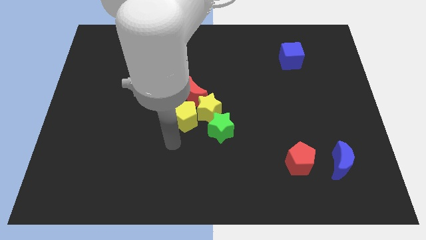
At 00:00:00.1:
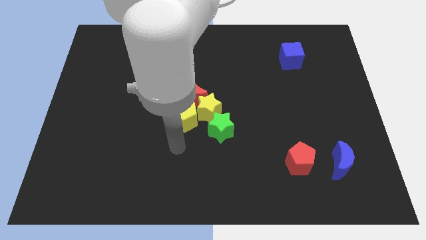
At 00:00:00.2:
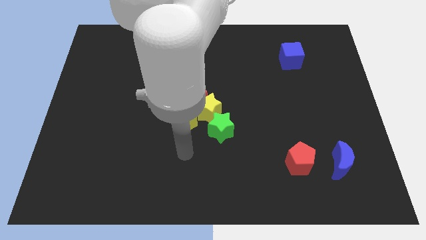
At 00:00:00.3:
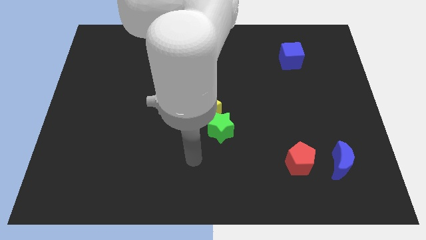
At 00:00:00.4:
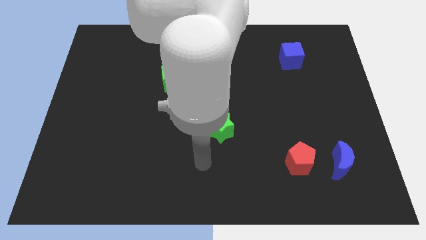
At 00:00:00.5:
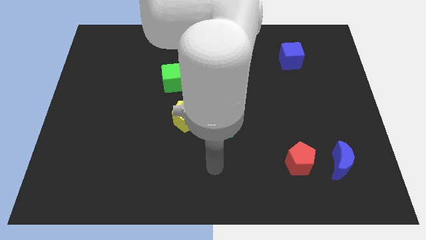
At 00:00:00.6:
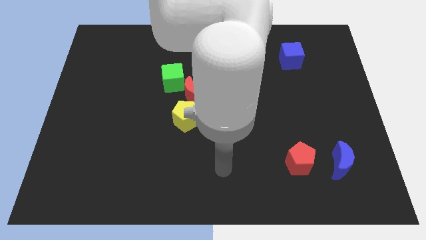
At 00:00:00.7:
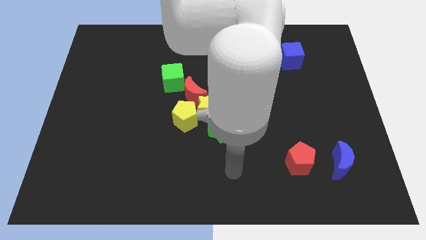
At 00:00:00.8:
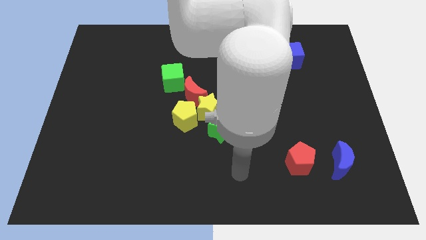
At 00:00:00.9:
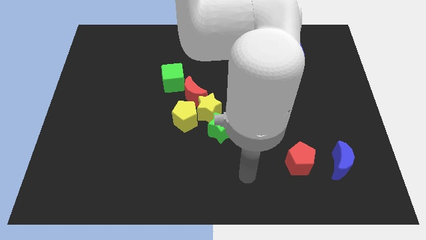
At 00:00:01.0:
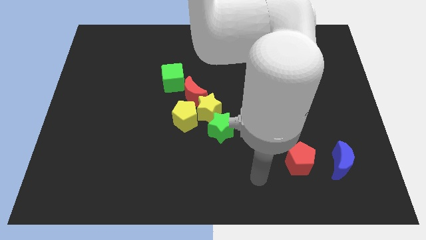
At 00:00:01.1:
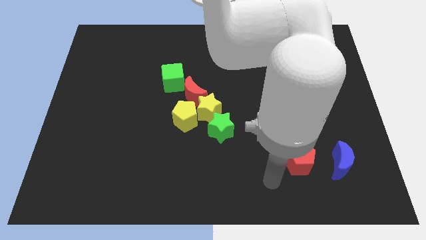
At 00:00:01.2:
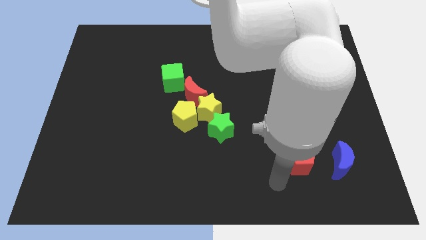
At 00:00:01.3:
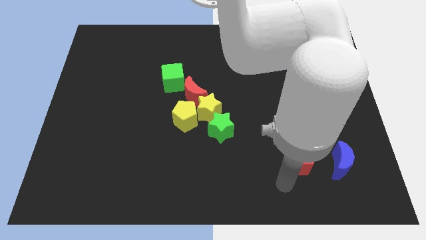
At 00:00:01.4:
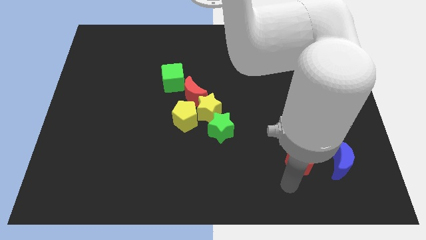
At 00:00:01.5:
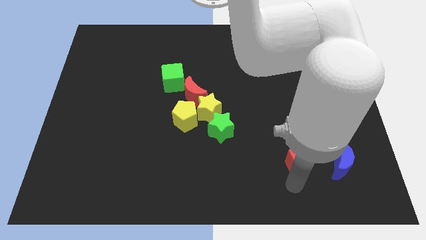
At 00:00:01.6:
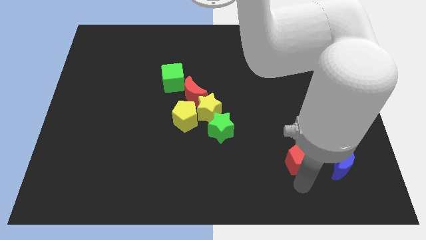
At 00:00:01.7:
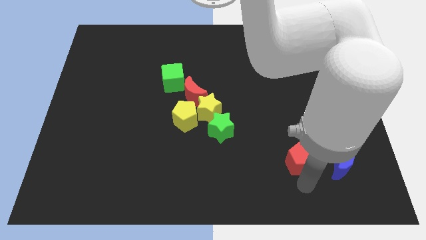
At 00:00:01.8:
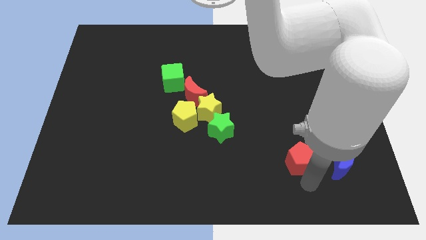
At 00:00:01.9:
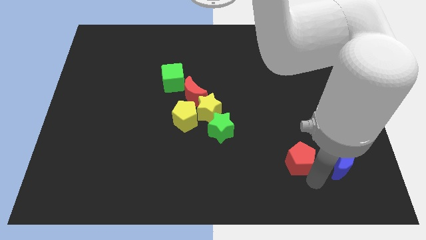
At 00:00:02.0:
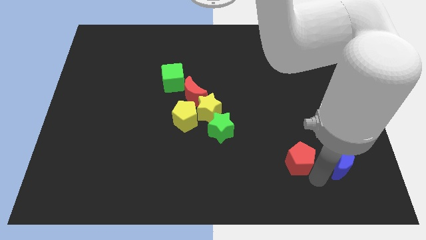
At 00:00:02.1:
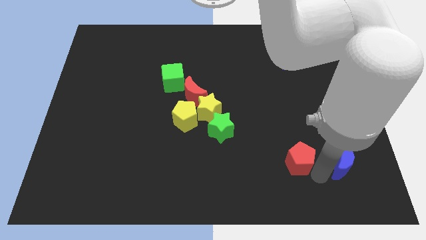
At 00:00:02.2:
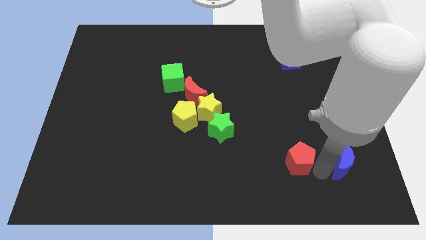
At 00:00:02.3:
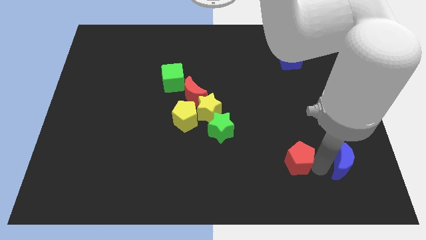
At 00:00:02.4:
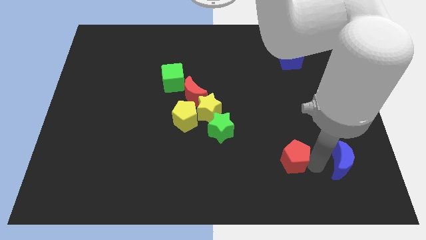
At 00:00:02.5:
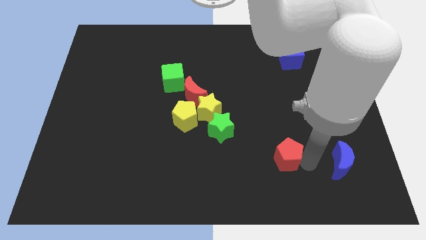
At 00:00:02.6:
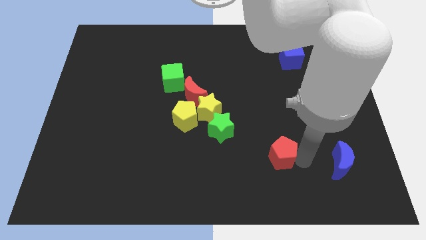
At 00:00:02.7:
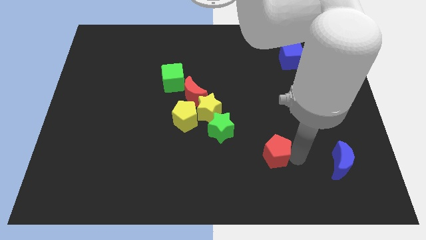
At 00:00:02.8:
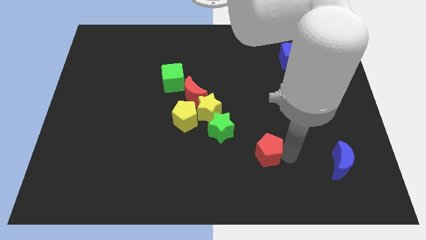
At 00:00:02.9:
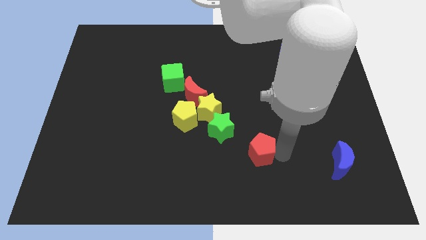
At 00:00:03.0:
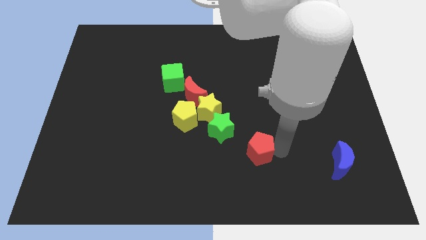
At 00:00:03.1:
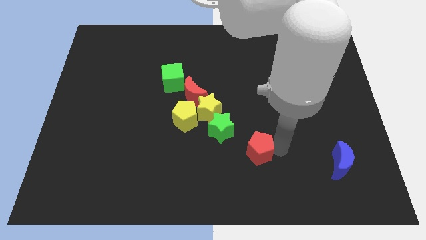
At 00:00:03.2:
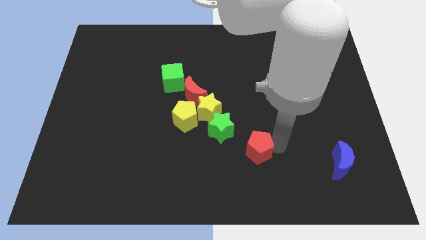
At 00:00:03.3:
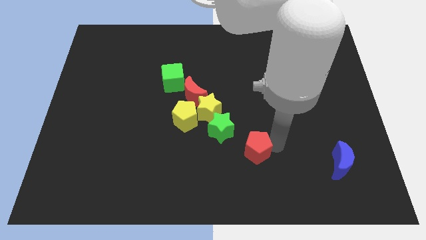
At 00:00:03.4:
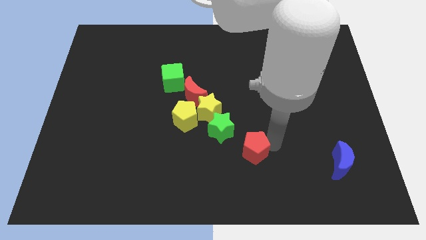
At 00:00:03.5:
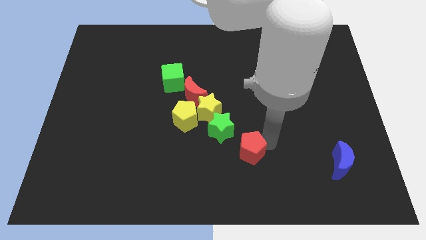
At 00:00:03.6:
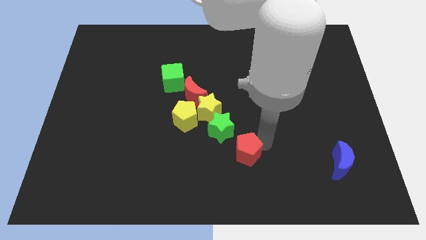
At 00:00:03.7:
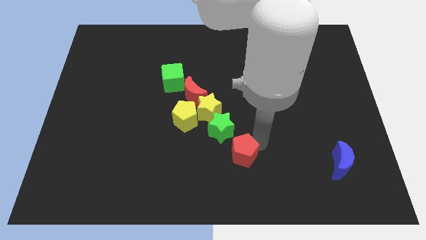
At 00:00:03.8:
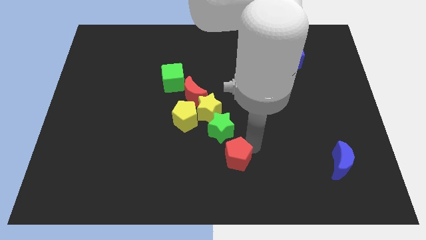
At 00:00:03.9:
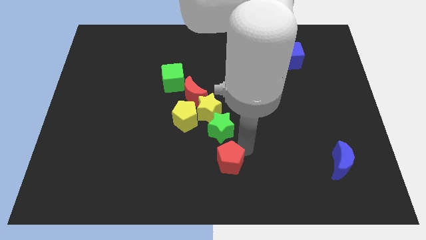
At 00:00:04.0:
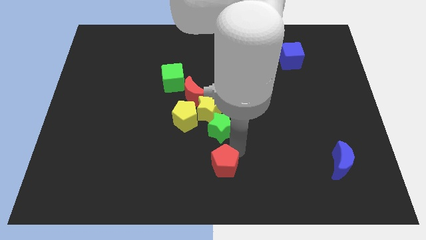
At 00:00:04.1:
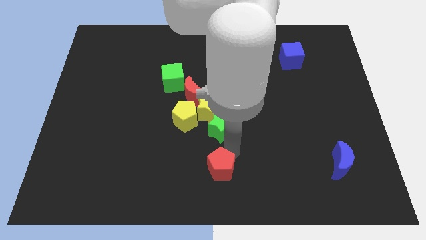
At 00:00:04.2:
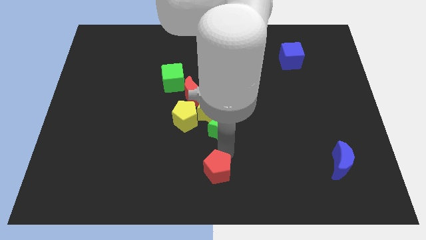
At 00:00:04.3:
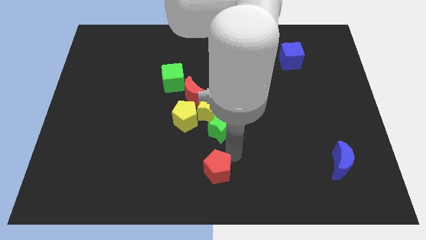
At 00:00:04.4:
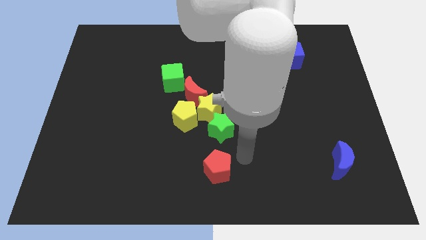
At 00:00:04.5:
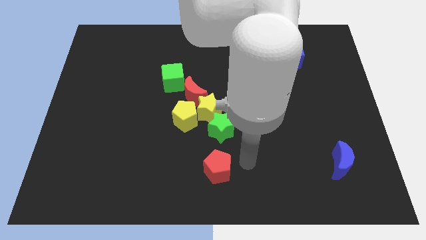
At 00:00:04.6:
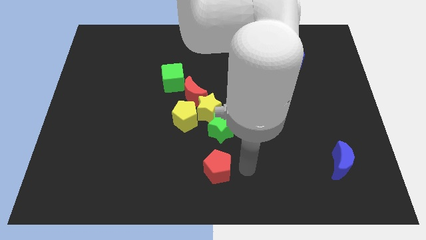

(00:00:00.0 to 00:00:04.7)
move the red pentagon to the bottom of the green star

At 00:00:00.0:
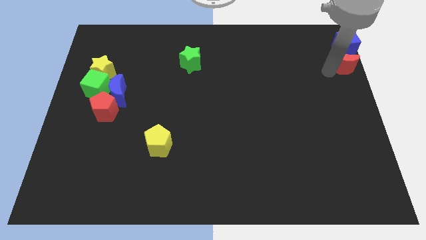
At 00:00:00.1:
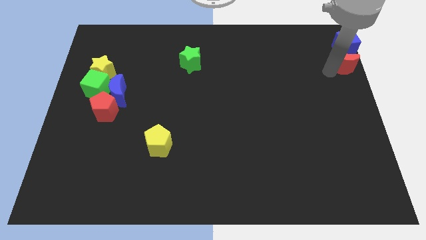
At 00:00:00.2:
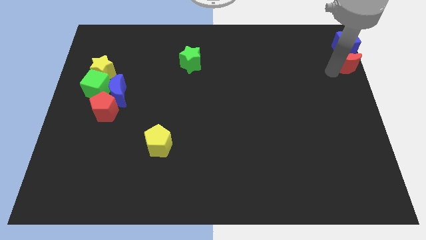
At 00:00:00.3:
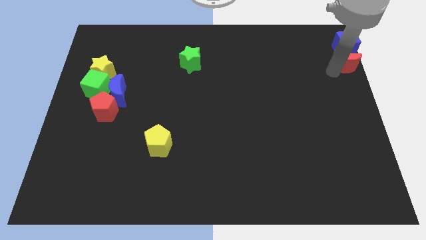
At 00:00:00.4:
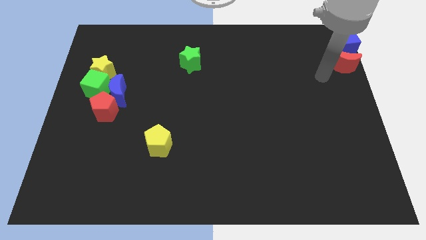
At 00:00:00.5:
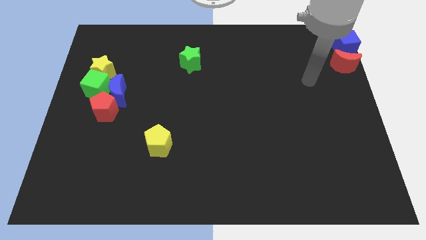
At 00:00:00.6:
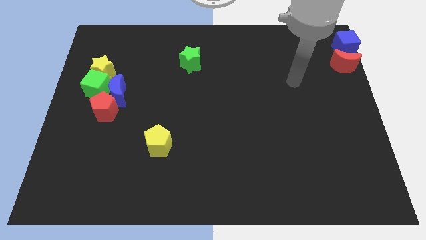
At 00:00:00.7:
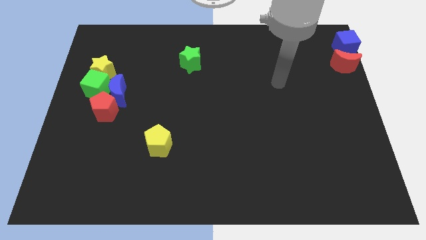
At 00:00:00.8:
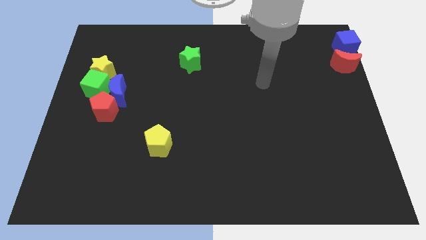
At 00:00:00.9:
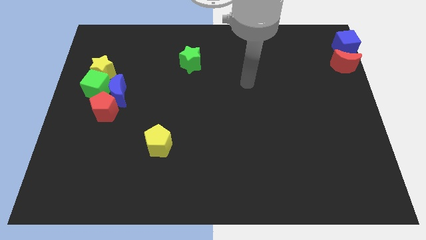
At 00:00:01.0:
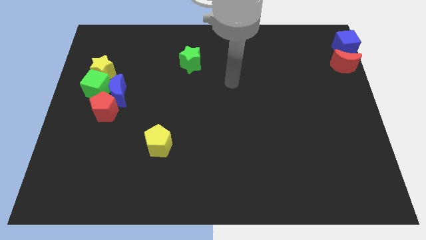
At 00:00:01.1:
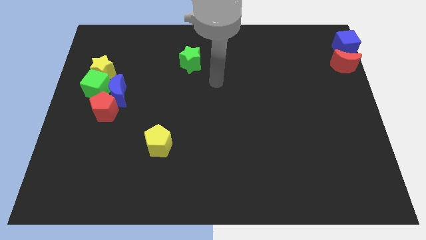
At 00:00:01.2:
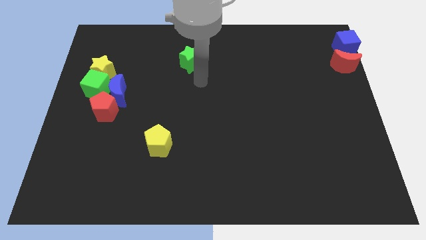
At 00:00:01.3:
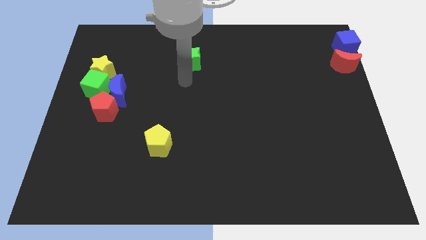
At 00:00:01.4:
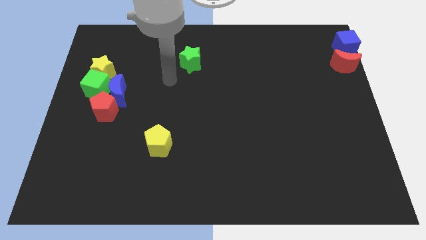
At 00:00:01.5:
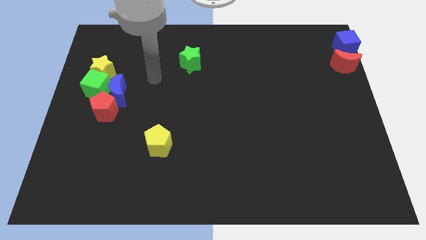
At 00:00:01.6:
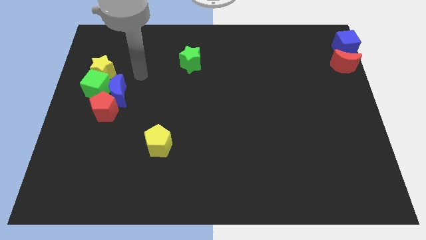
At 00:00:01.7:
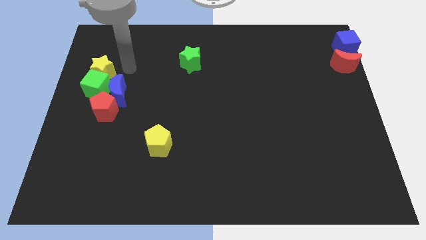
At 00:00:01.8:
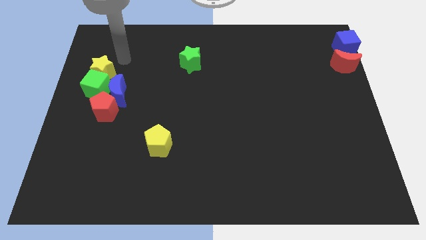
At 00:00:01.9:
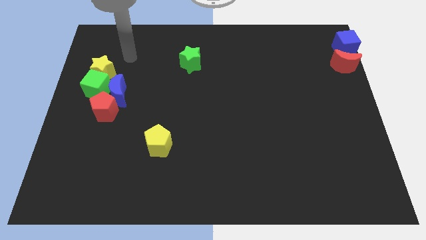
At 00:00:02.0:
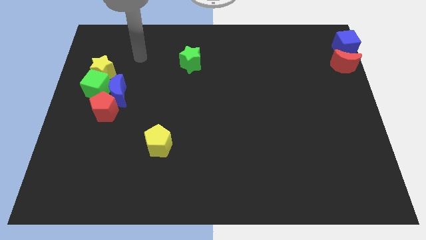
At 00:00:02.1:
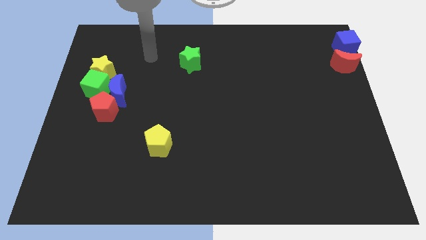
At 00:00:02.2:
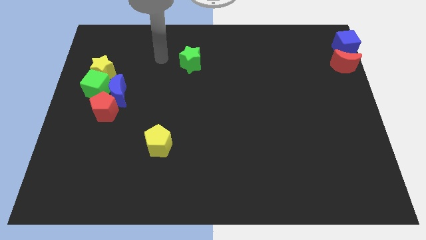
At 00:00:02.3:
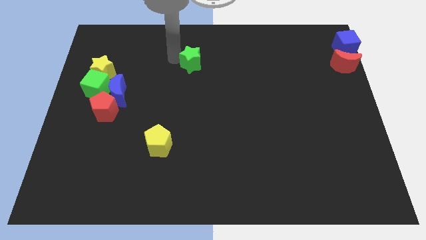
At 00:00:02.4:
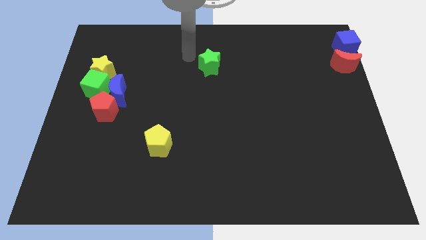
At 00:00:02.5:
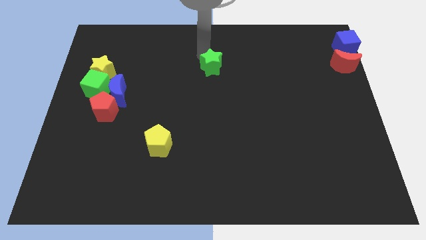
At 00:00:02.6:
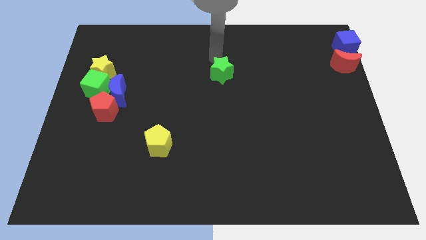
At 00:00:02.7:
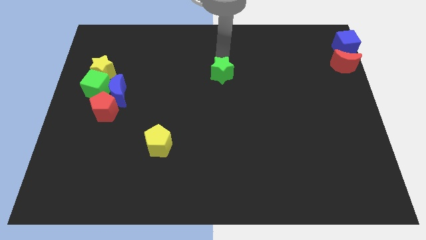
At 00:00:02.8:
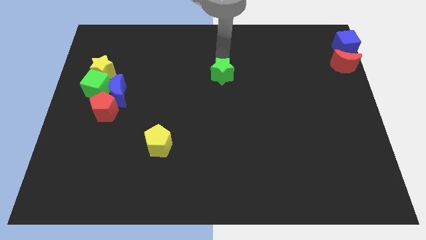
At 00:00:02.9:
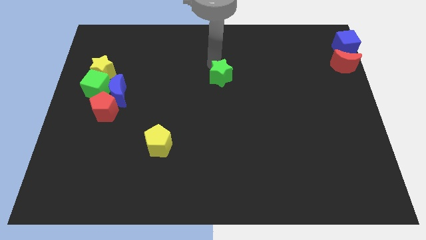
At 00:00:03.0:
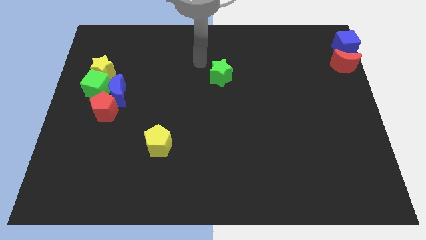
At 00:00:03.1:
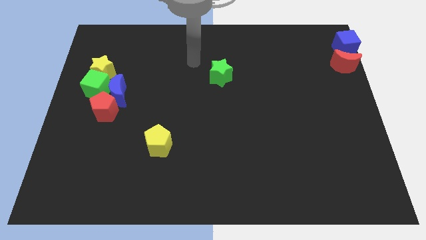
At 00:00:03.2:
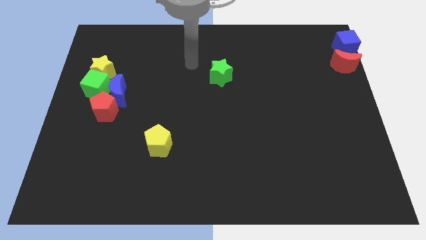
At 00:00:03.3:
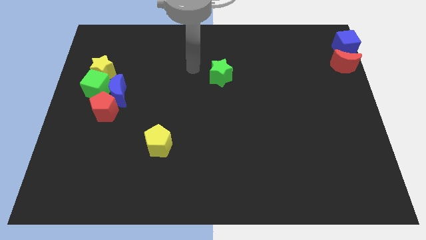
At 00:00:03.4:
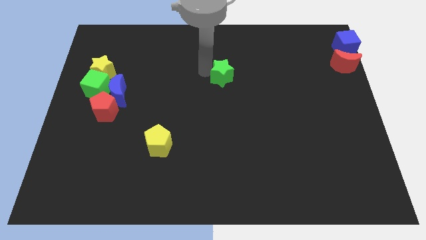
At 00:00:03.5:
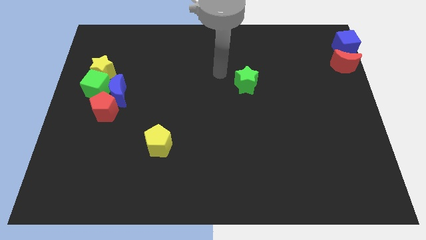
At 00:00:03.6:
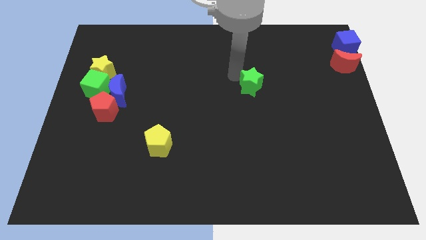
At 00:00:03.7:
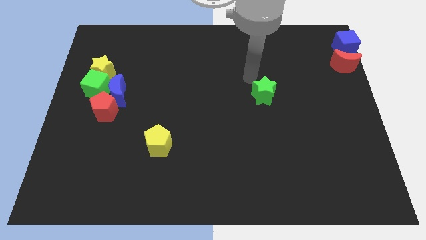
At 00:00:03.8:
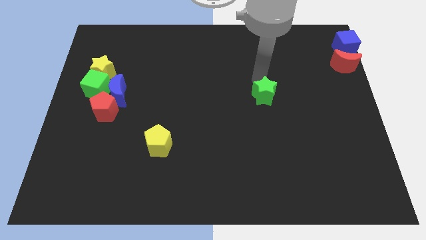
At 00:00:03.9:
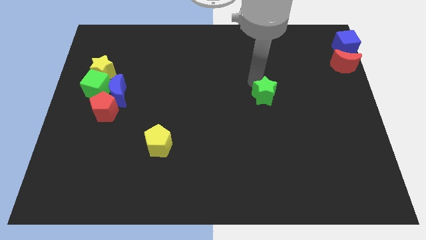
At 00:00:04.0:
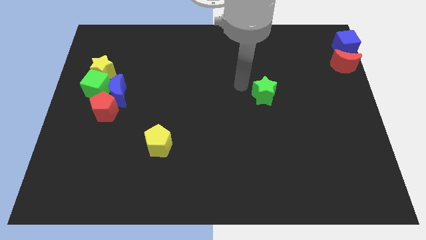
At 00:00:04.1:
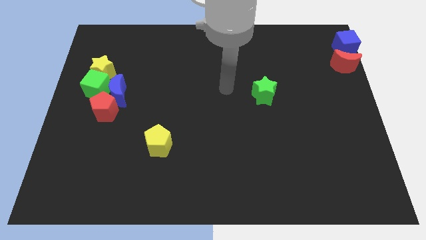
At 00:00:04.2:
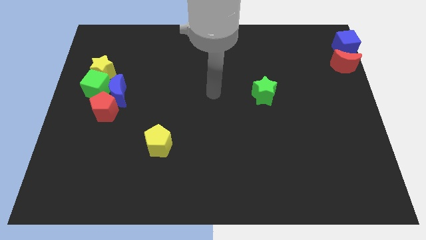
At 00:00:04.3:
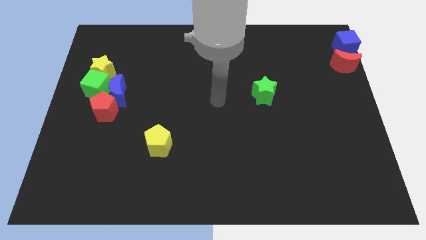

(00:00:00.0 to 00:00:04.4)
move the green star towards the red crescent
